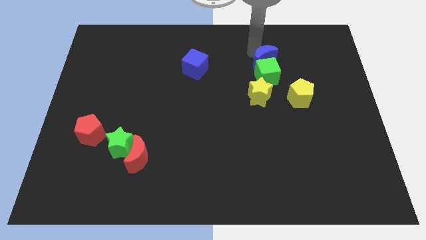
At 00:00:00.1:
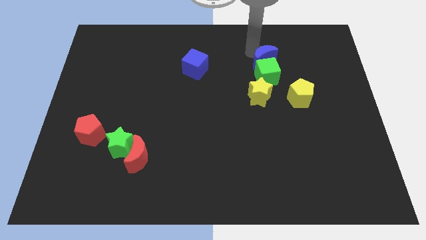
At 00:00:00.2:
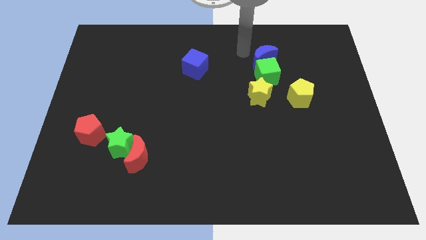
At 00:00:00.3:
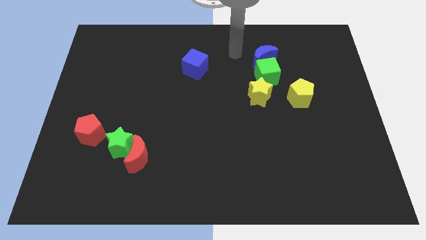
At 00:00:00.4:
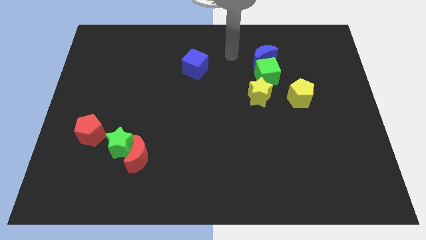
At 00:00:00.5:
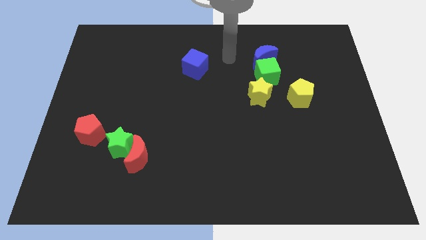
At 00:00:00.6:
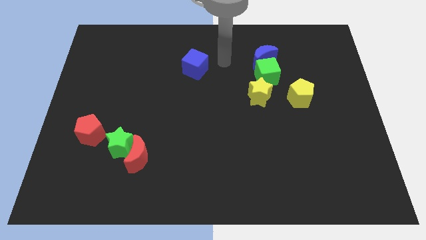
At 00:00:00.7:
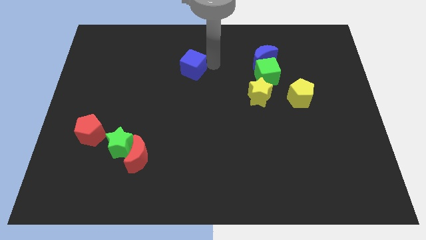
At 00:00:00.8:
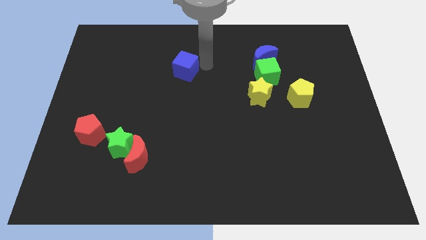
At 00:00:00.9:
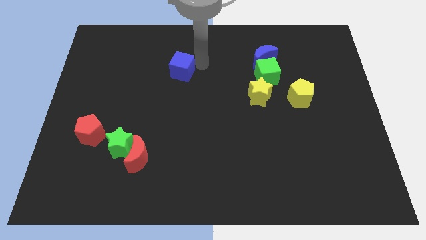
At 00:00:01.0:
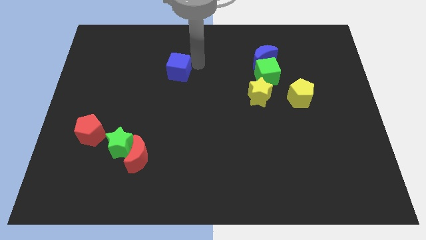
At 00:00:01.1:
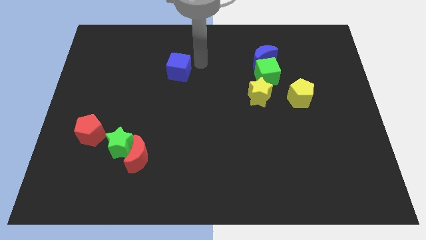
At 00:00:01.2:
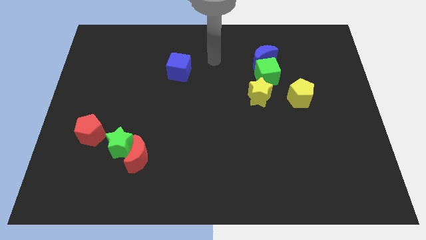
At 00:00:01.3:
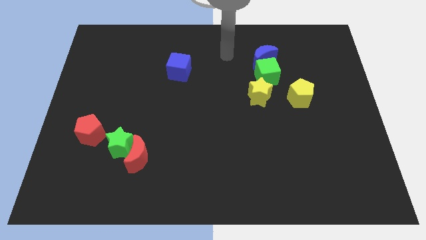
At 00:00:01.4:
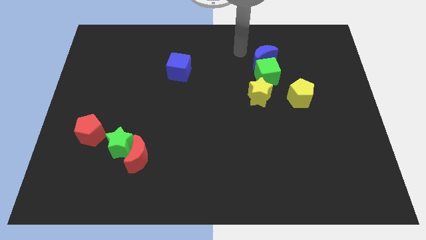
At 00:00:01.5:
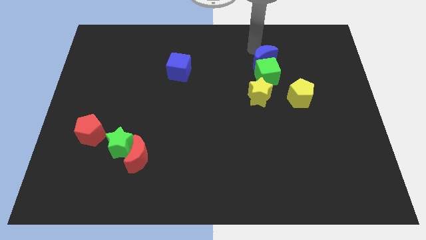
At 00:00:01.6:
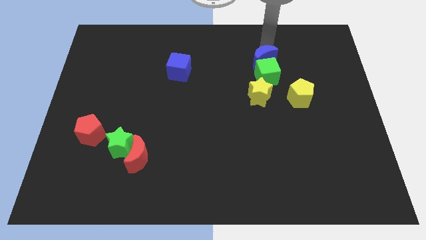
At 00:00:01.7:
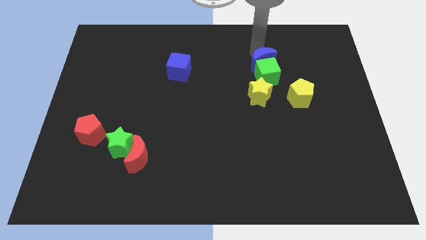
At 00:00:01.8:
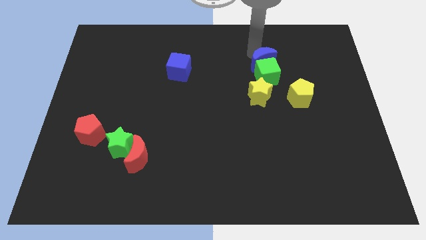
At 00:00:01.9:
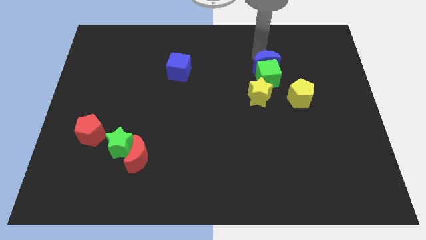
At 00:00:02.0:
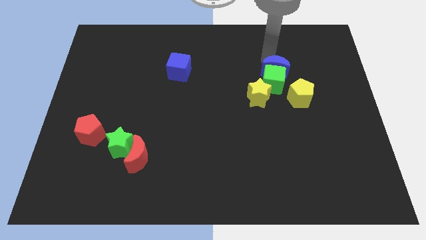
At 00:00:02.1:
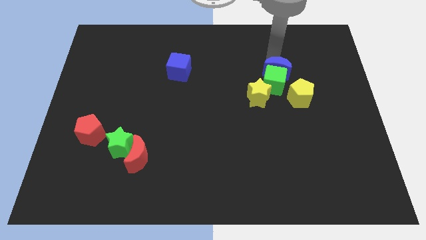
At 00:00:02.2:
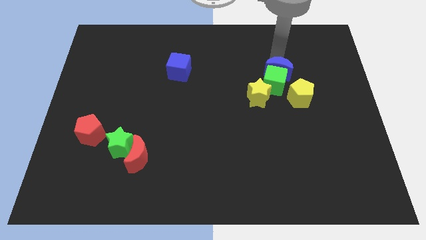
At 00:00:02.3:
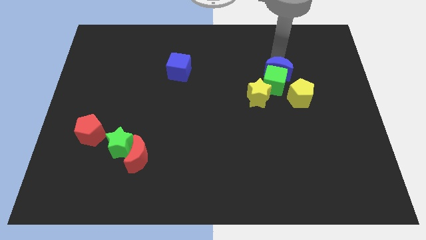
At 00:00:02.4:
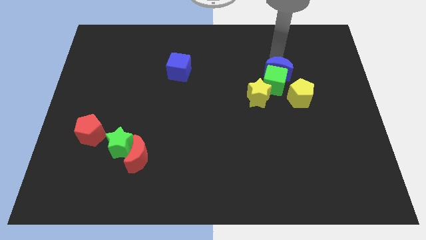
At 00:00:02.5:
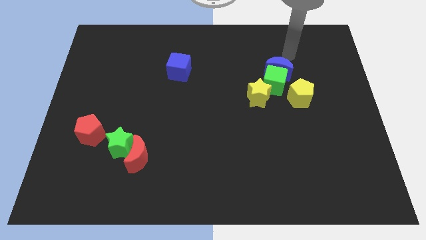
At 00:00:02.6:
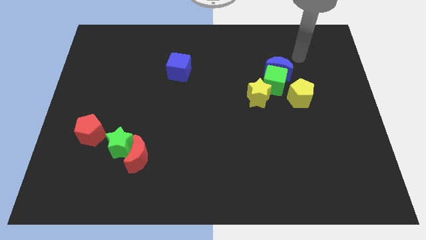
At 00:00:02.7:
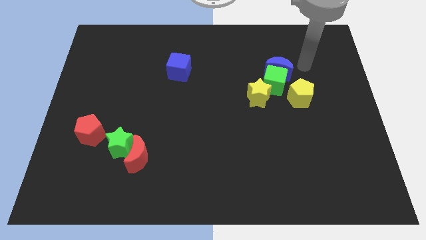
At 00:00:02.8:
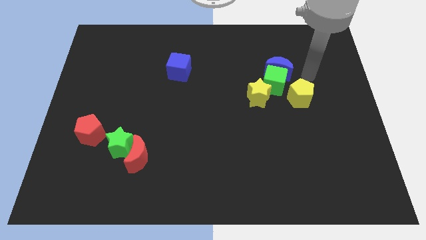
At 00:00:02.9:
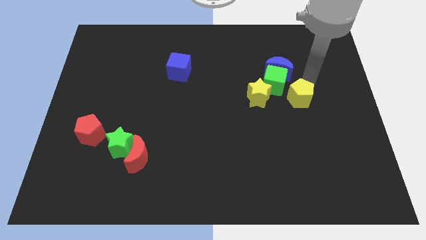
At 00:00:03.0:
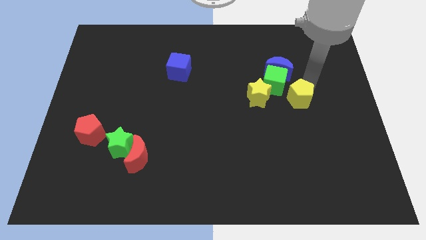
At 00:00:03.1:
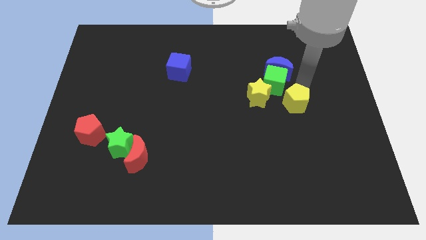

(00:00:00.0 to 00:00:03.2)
move the blue blocks downwards

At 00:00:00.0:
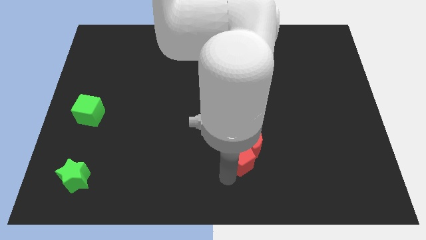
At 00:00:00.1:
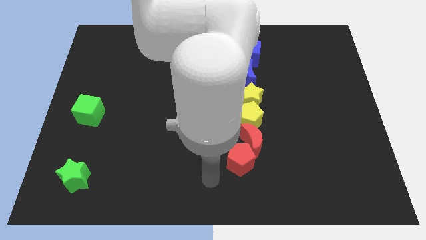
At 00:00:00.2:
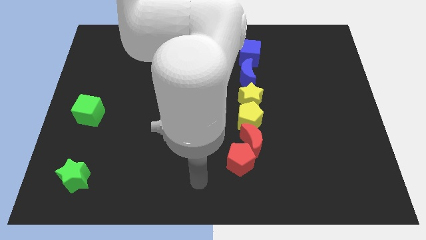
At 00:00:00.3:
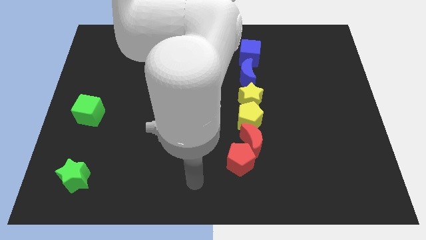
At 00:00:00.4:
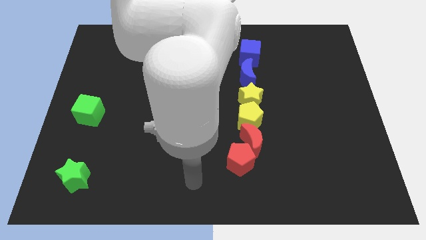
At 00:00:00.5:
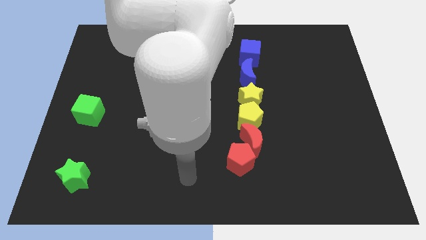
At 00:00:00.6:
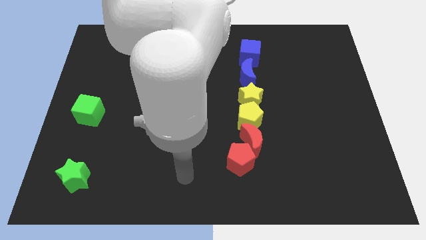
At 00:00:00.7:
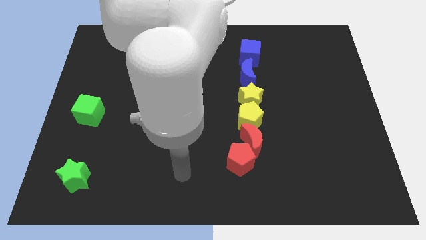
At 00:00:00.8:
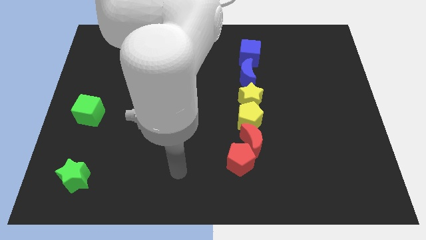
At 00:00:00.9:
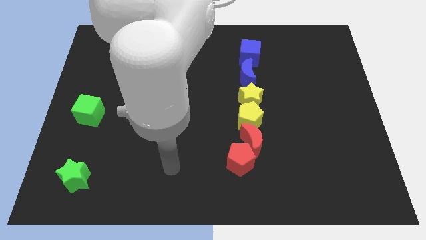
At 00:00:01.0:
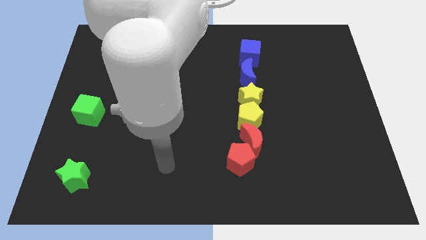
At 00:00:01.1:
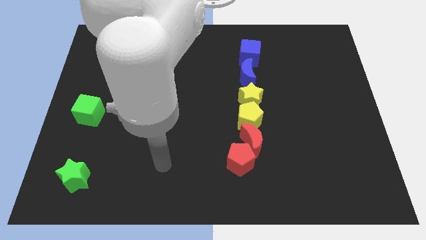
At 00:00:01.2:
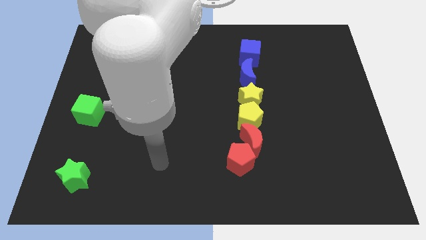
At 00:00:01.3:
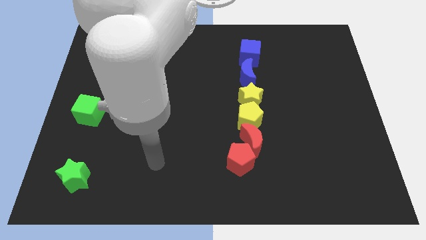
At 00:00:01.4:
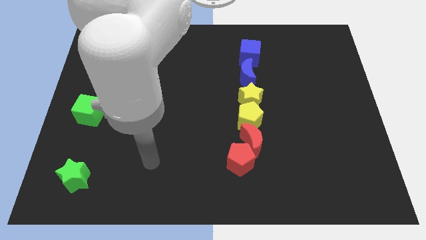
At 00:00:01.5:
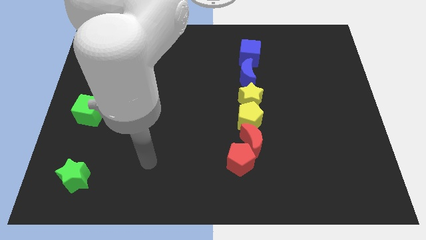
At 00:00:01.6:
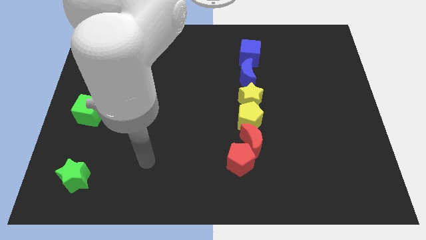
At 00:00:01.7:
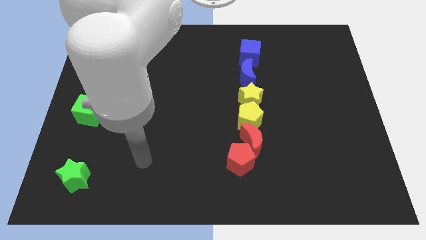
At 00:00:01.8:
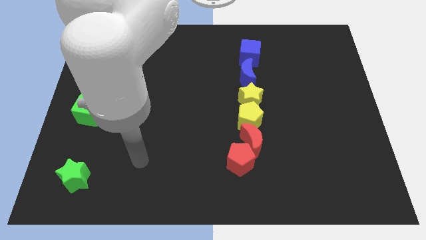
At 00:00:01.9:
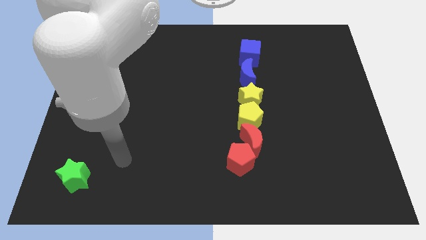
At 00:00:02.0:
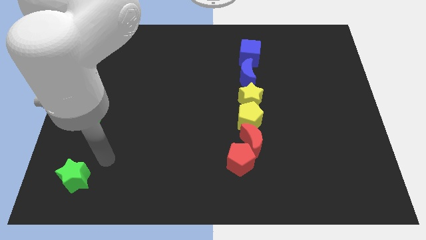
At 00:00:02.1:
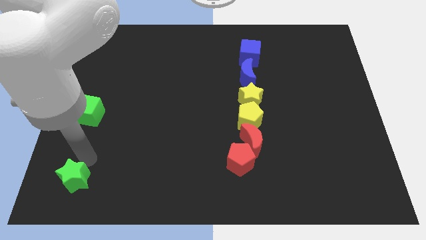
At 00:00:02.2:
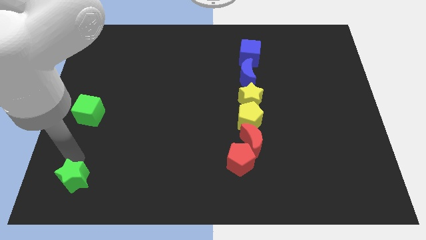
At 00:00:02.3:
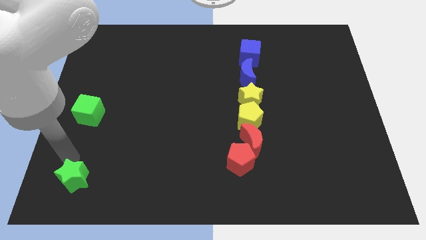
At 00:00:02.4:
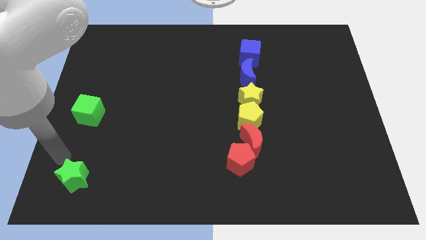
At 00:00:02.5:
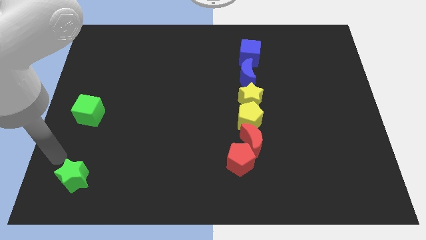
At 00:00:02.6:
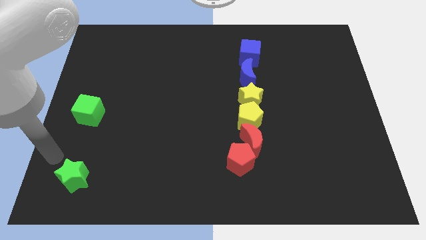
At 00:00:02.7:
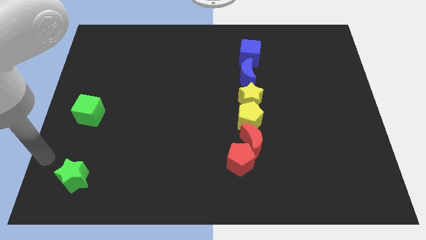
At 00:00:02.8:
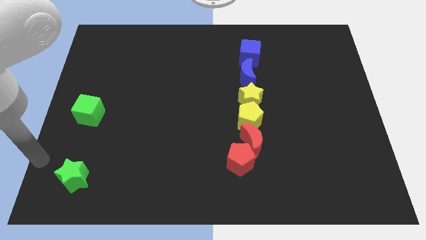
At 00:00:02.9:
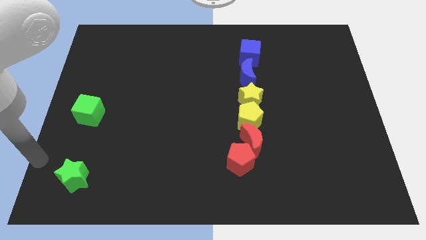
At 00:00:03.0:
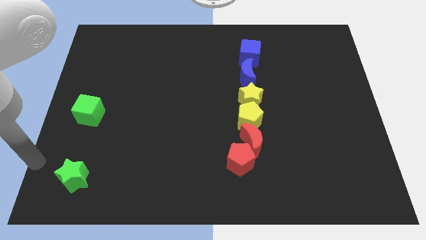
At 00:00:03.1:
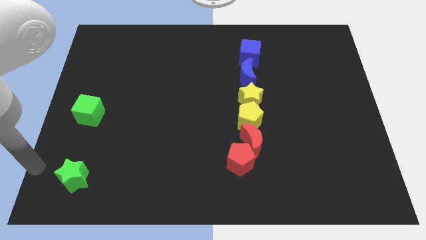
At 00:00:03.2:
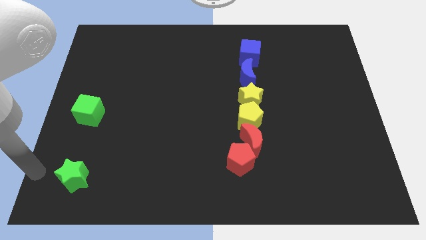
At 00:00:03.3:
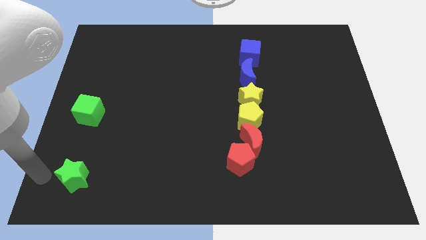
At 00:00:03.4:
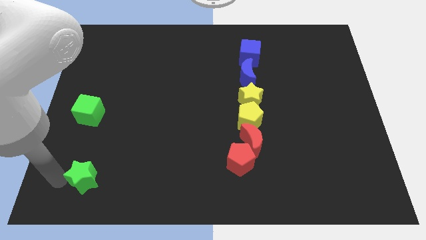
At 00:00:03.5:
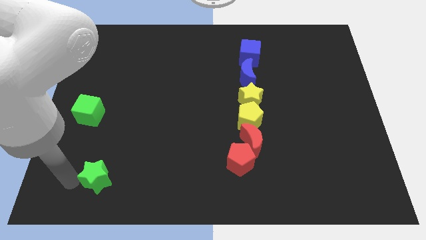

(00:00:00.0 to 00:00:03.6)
slide the green star slightly to the right side of the board

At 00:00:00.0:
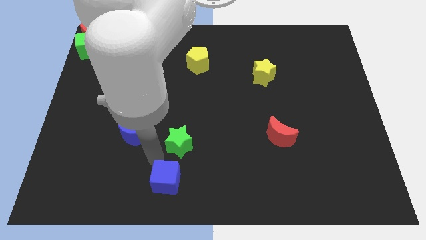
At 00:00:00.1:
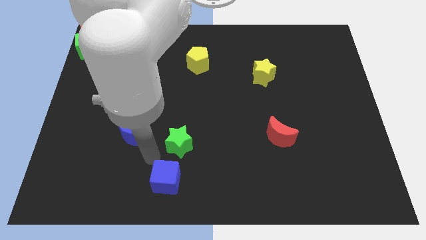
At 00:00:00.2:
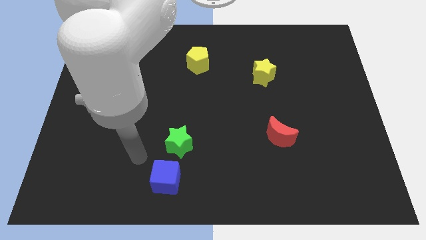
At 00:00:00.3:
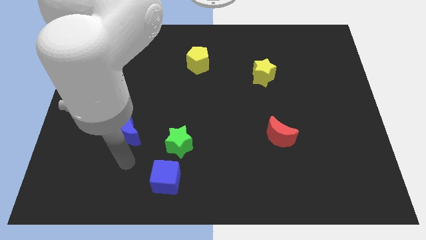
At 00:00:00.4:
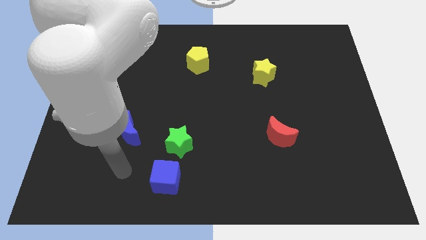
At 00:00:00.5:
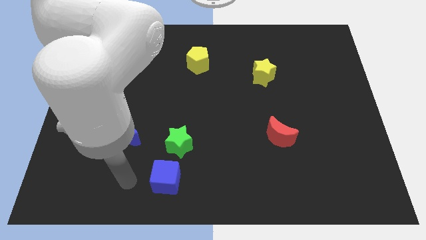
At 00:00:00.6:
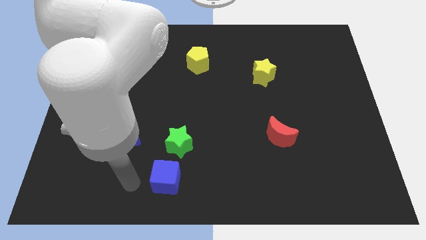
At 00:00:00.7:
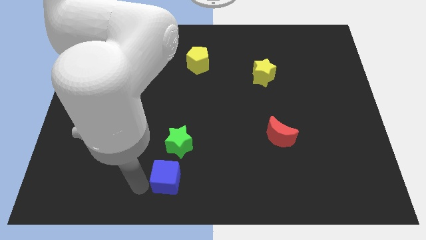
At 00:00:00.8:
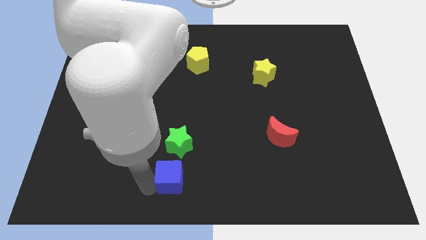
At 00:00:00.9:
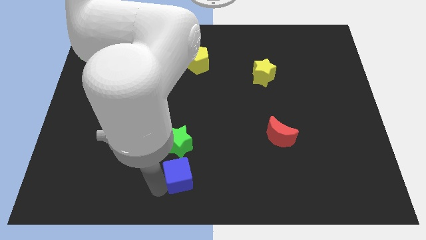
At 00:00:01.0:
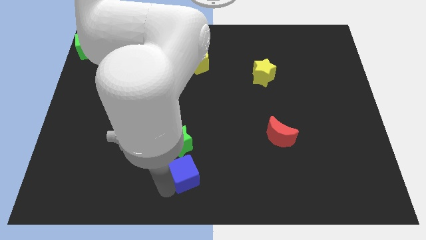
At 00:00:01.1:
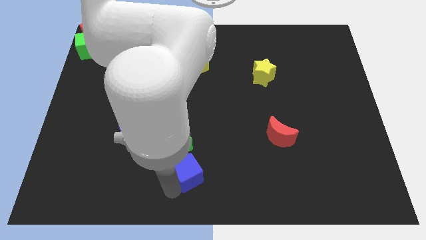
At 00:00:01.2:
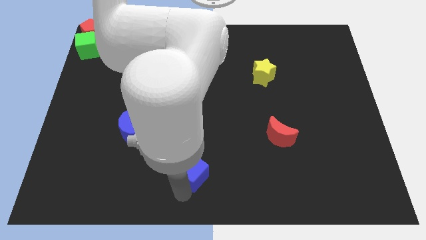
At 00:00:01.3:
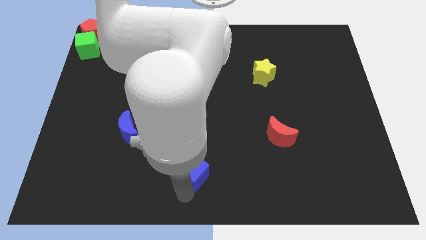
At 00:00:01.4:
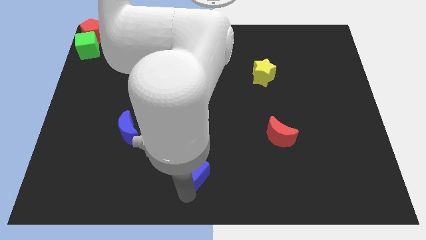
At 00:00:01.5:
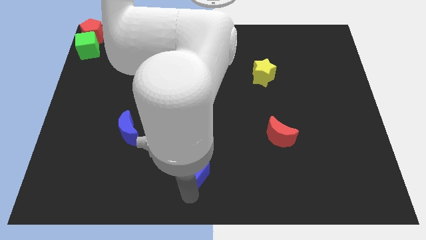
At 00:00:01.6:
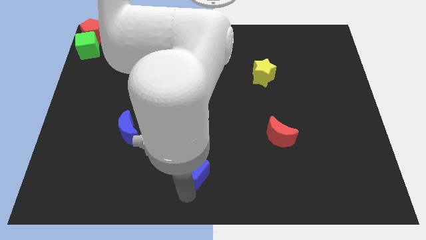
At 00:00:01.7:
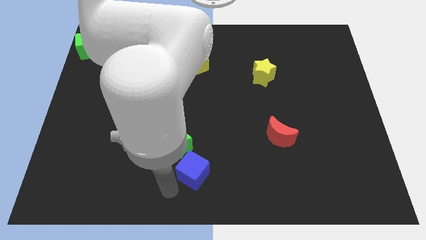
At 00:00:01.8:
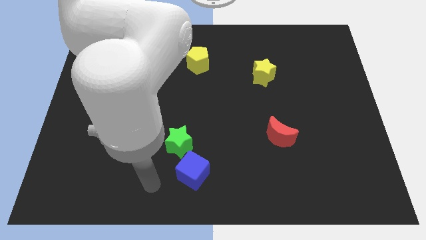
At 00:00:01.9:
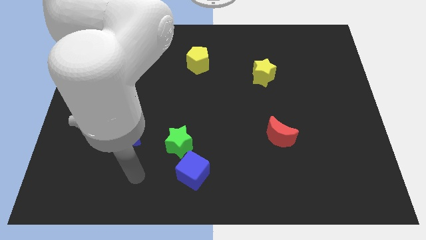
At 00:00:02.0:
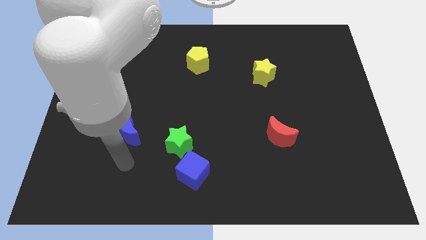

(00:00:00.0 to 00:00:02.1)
place the blue block at the bottom right side of green star
